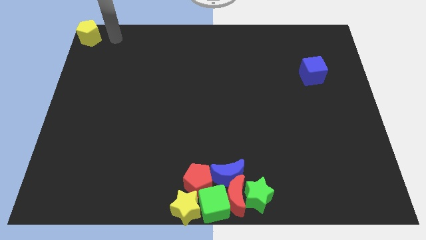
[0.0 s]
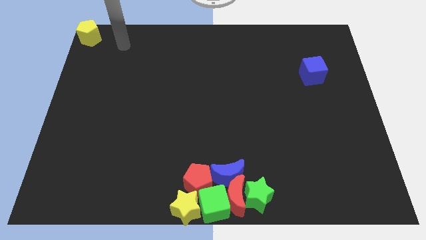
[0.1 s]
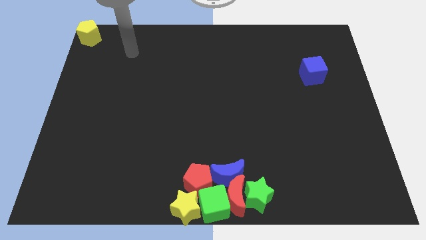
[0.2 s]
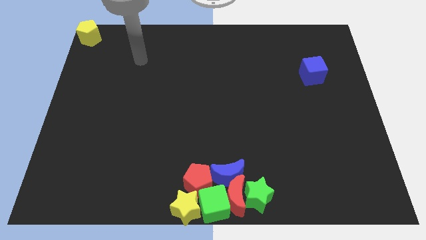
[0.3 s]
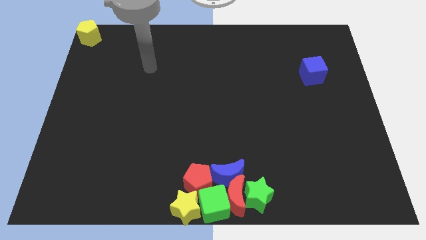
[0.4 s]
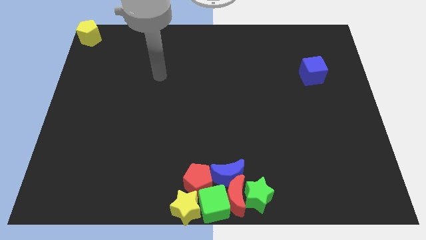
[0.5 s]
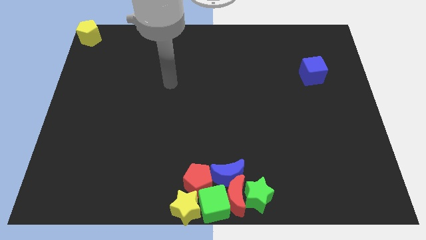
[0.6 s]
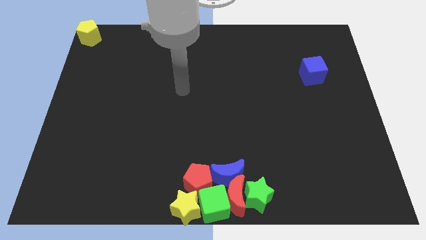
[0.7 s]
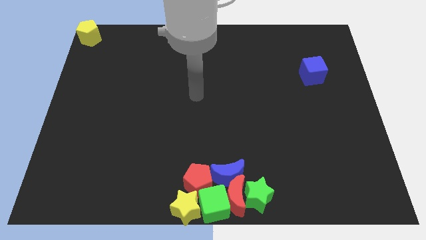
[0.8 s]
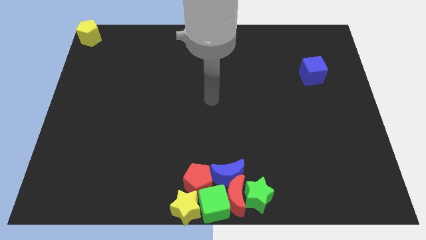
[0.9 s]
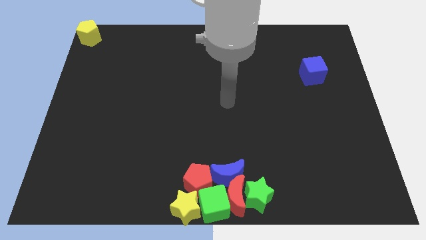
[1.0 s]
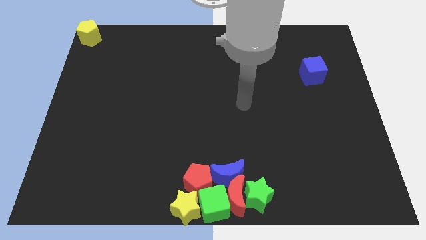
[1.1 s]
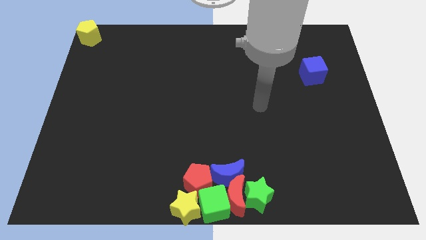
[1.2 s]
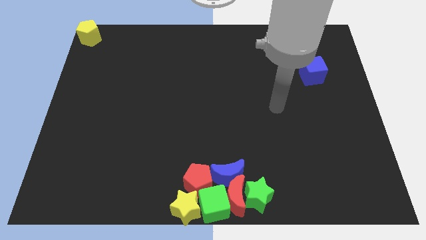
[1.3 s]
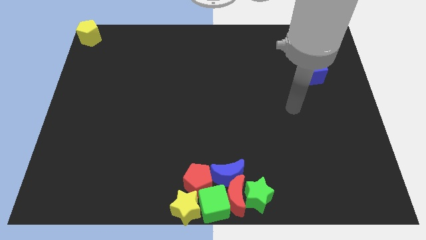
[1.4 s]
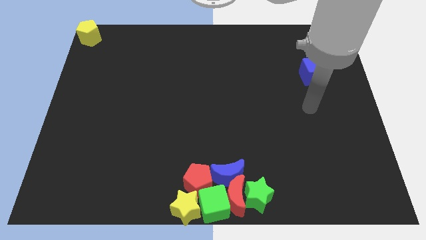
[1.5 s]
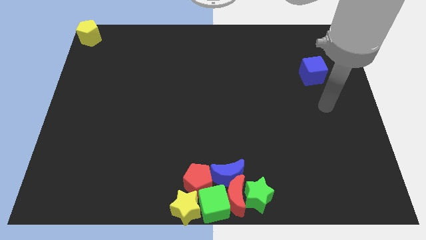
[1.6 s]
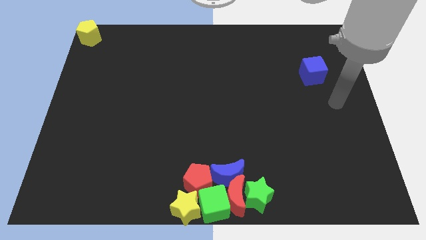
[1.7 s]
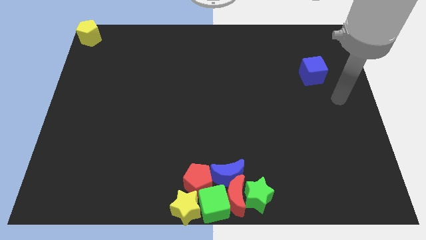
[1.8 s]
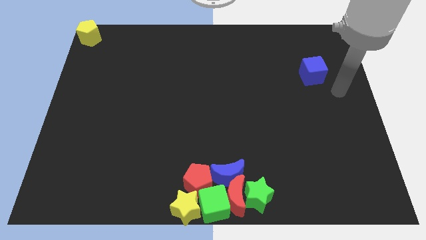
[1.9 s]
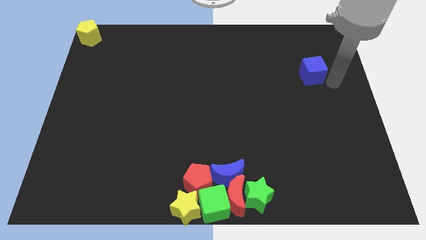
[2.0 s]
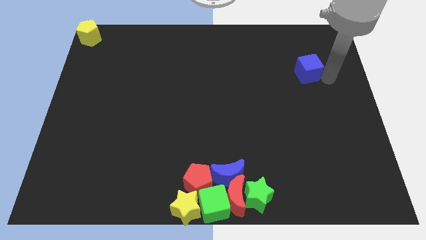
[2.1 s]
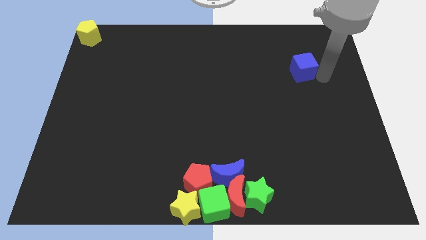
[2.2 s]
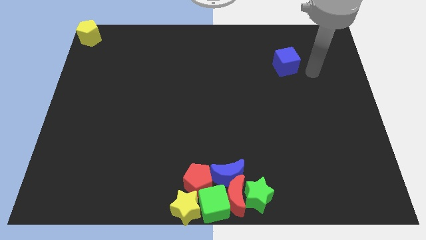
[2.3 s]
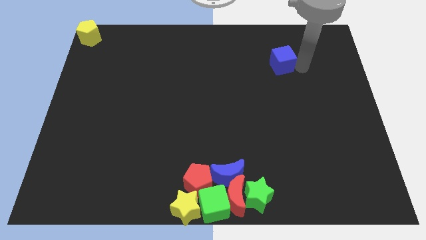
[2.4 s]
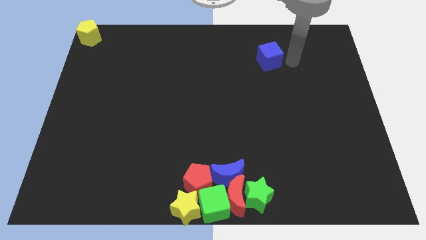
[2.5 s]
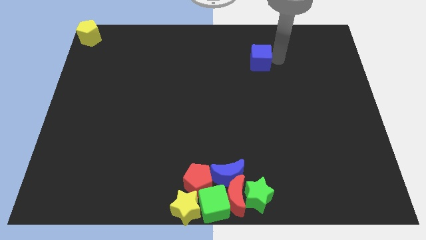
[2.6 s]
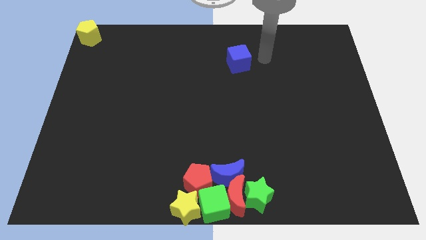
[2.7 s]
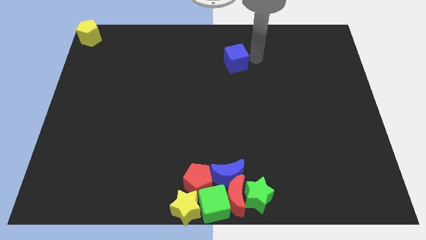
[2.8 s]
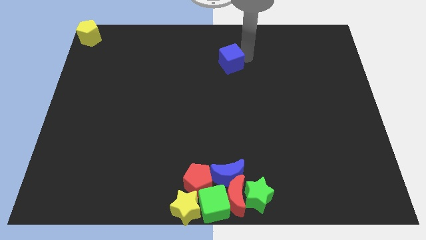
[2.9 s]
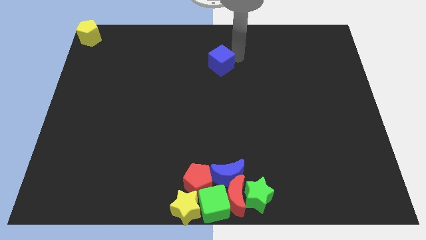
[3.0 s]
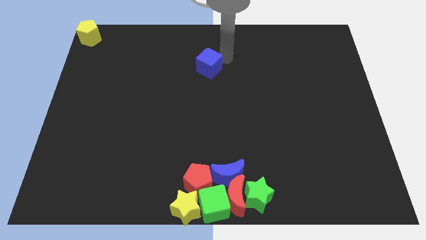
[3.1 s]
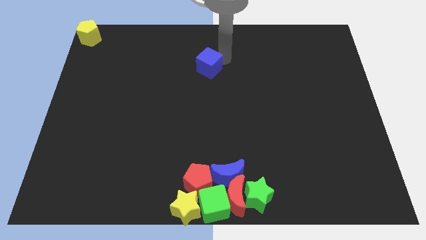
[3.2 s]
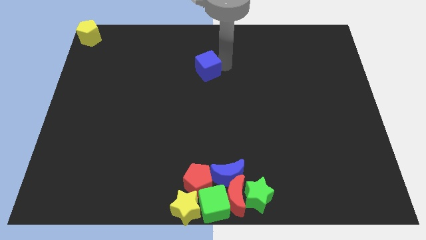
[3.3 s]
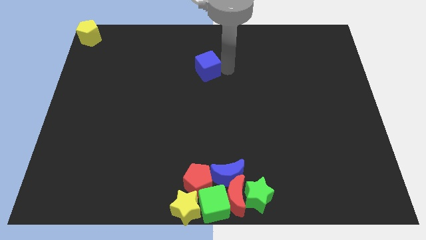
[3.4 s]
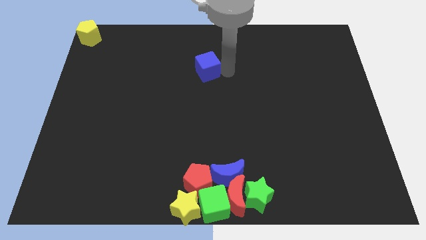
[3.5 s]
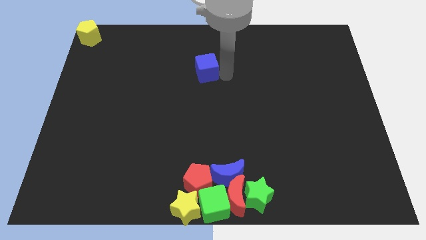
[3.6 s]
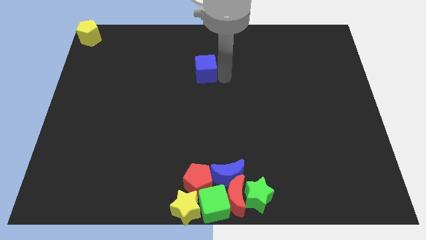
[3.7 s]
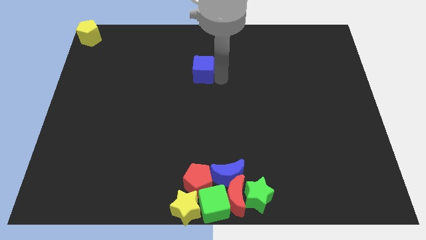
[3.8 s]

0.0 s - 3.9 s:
put the blue cube vertically above the blue moon

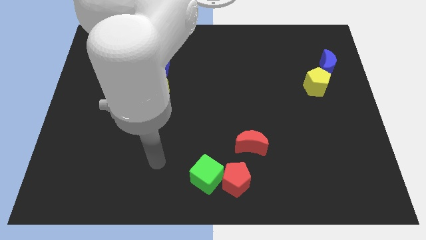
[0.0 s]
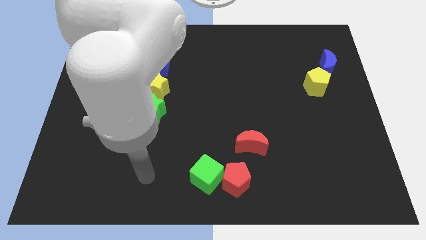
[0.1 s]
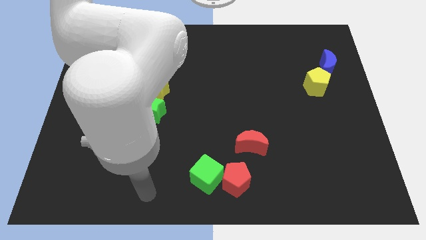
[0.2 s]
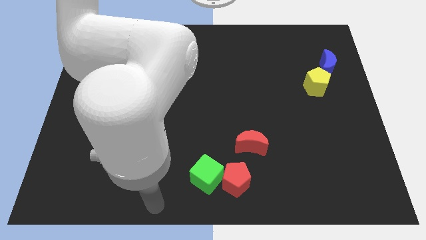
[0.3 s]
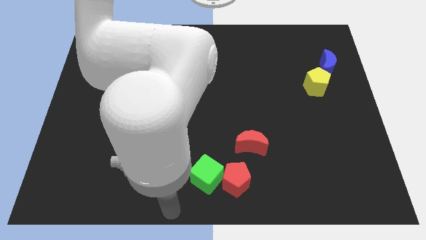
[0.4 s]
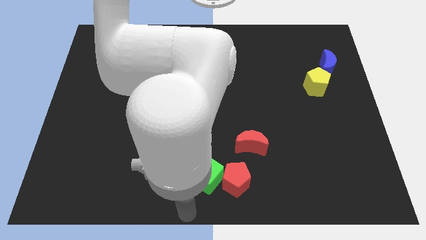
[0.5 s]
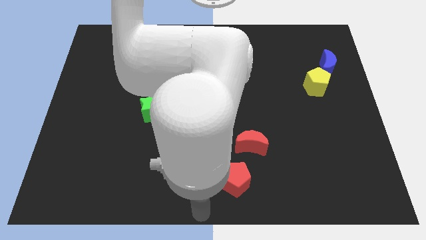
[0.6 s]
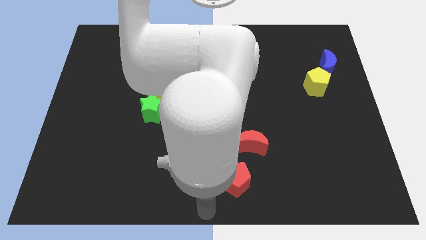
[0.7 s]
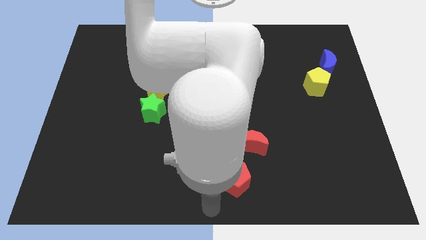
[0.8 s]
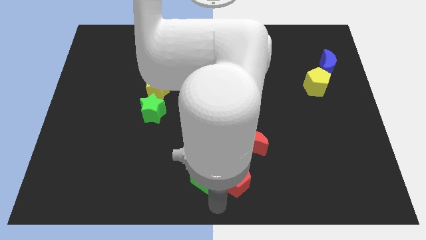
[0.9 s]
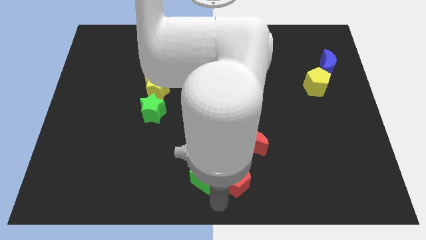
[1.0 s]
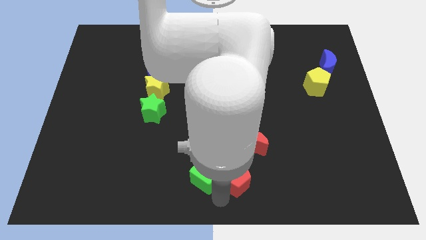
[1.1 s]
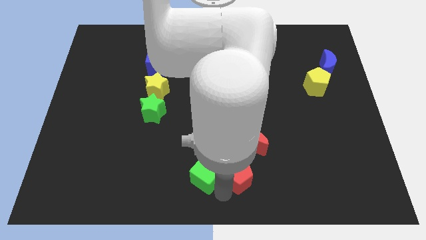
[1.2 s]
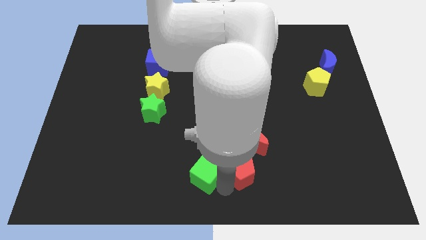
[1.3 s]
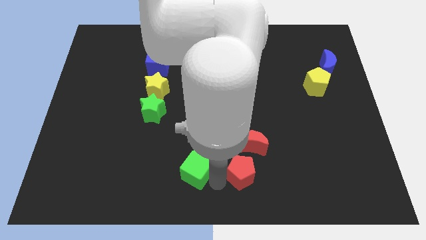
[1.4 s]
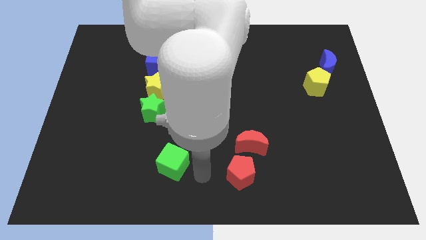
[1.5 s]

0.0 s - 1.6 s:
separate green cube from the red pentagon

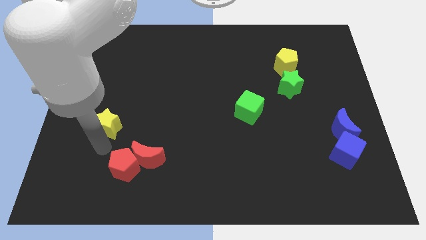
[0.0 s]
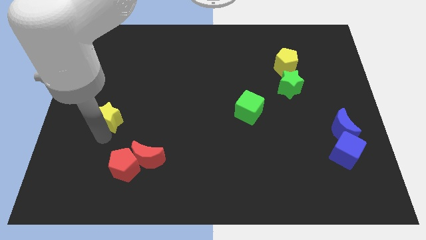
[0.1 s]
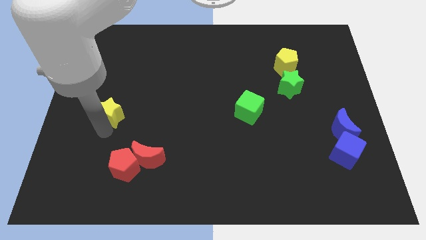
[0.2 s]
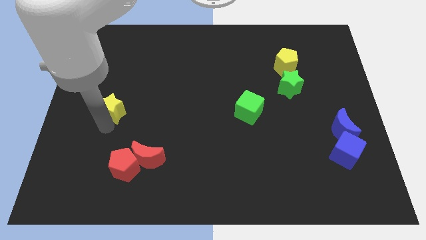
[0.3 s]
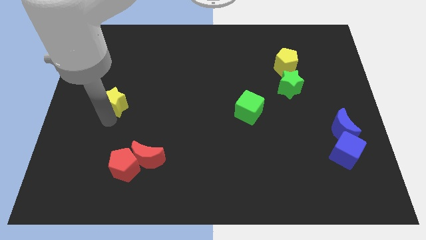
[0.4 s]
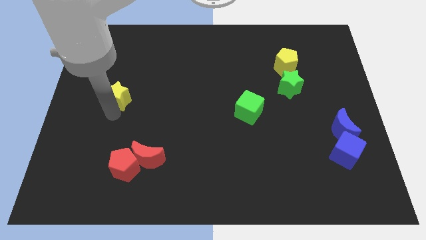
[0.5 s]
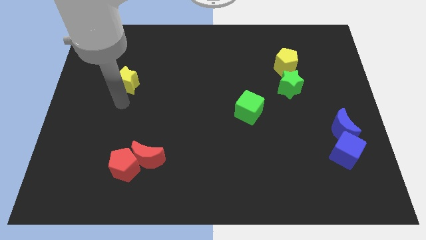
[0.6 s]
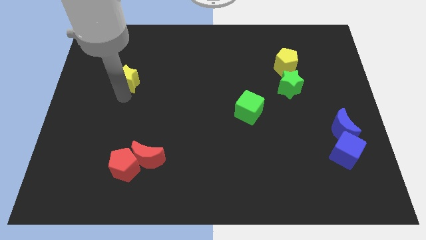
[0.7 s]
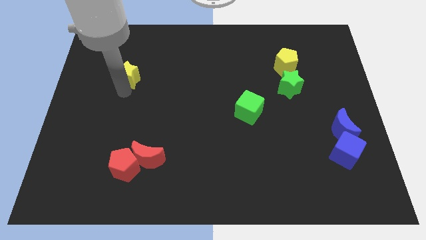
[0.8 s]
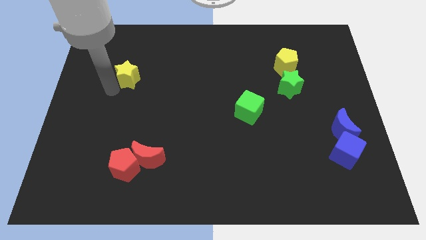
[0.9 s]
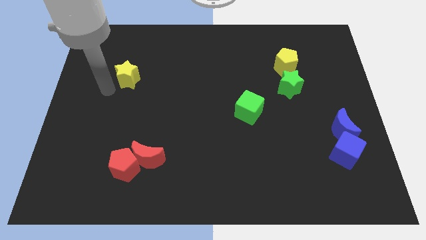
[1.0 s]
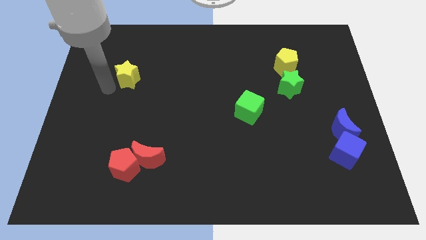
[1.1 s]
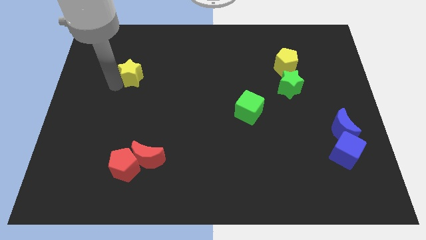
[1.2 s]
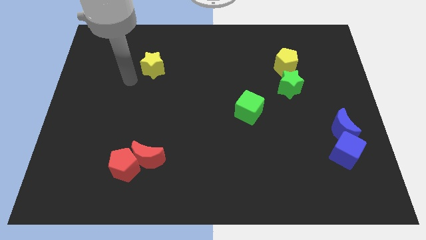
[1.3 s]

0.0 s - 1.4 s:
push the yellow star towards top

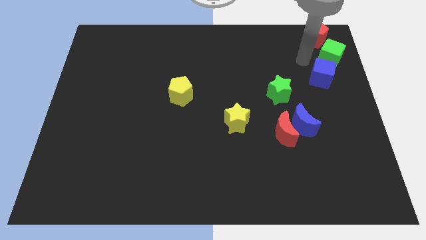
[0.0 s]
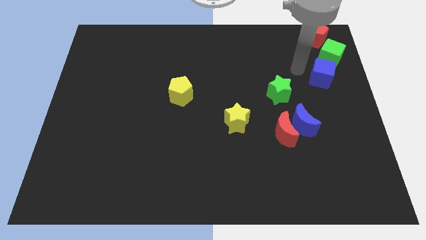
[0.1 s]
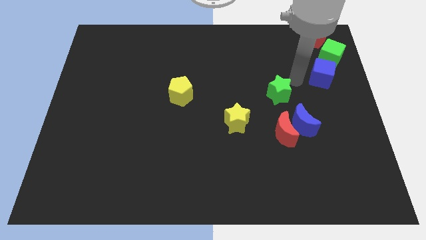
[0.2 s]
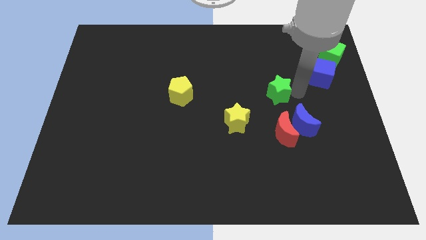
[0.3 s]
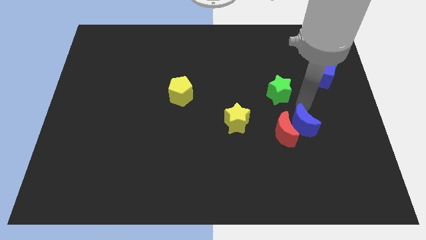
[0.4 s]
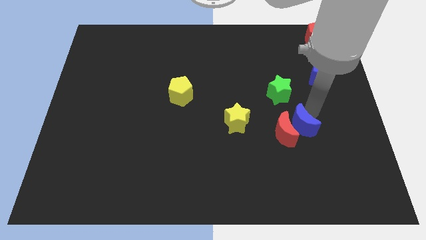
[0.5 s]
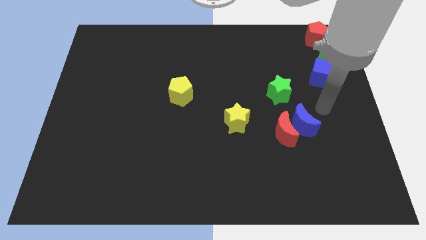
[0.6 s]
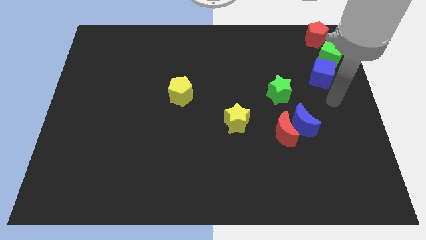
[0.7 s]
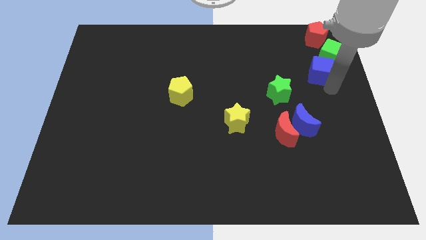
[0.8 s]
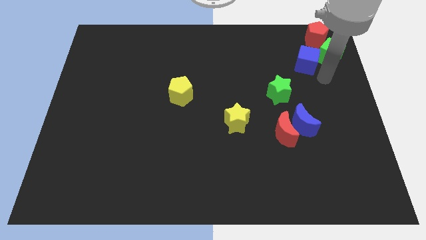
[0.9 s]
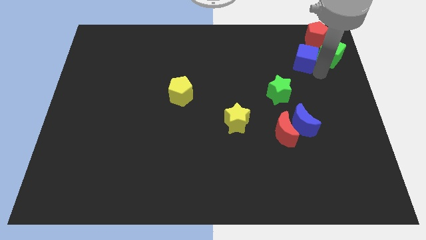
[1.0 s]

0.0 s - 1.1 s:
slide blue cube to the left of green cube

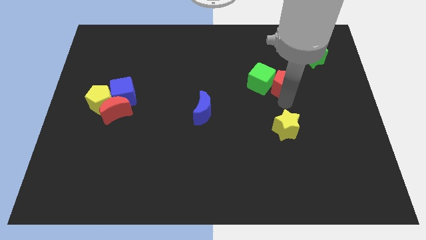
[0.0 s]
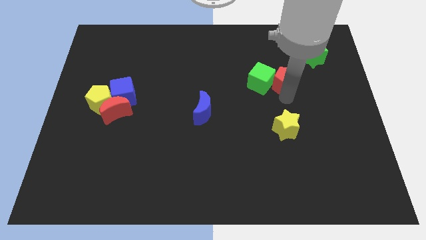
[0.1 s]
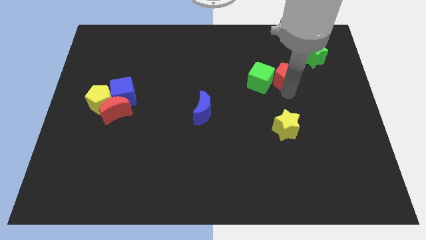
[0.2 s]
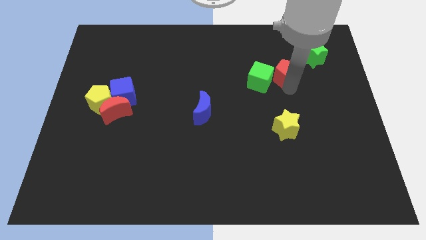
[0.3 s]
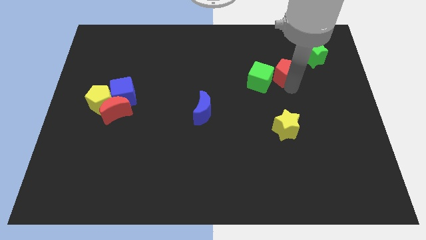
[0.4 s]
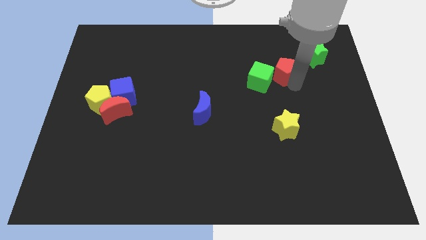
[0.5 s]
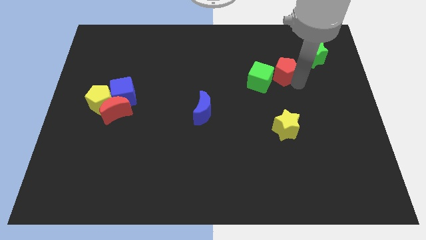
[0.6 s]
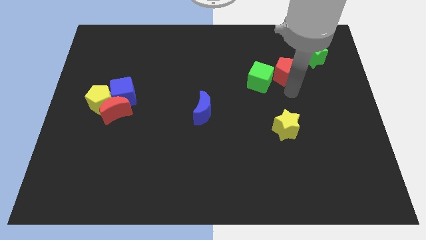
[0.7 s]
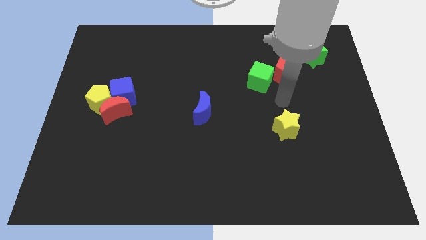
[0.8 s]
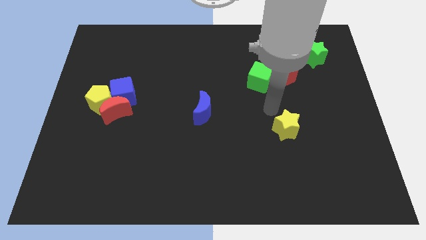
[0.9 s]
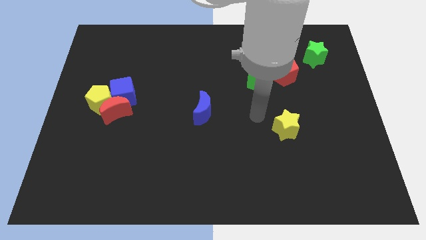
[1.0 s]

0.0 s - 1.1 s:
place red pentagon between green star and green cube
